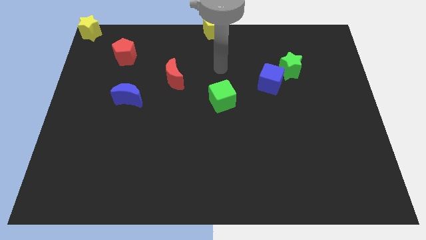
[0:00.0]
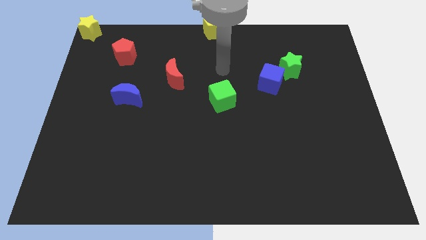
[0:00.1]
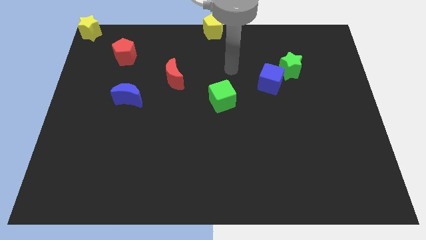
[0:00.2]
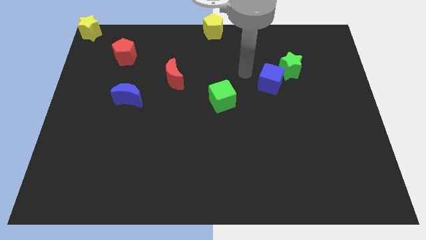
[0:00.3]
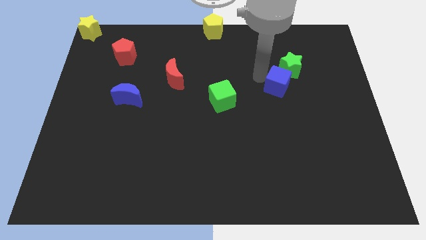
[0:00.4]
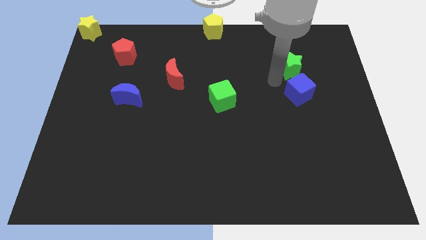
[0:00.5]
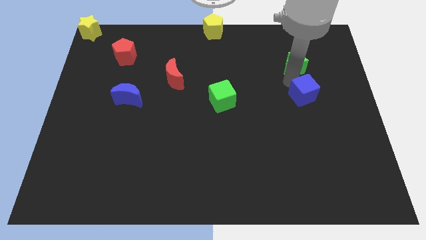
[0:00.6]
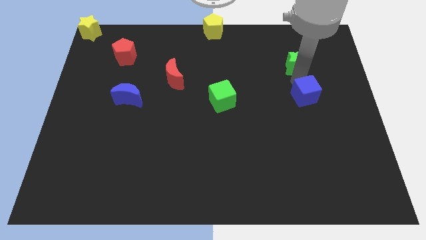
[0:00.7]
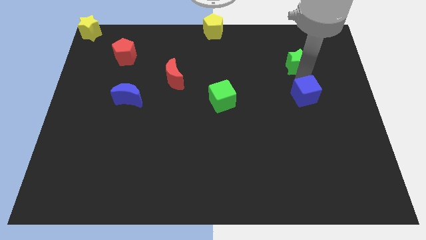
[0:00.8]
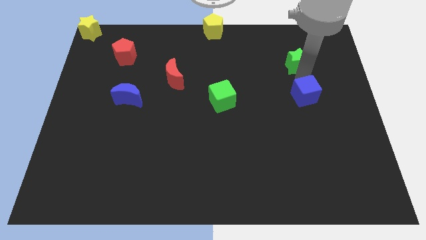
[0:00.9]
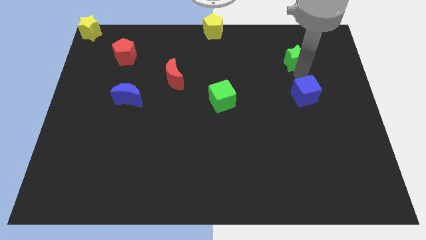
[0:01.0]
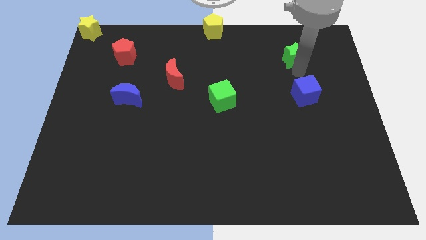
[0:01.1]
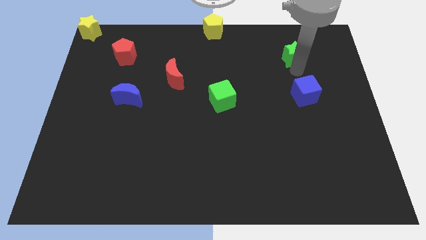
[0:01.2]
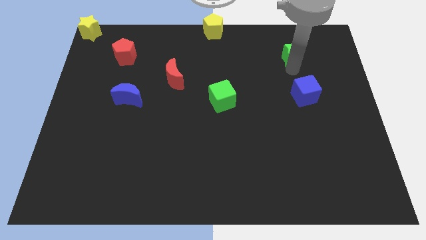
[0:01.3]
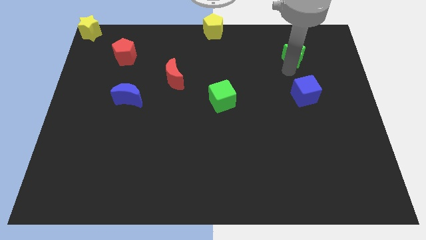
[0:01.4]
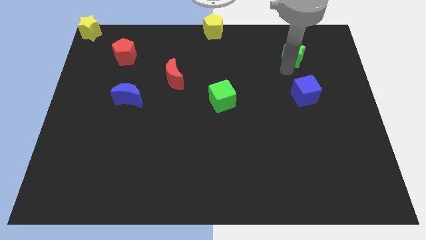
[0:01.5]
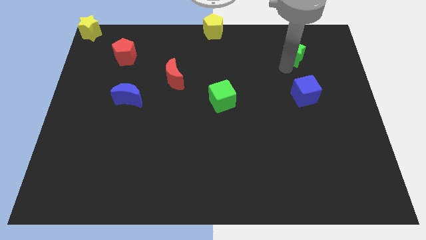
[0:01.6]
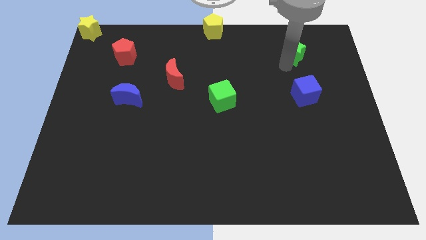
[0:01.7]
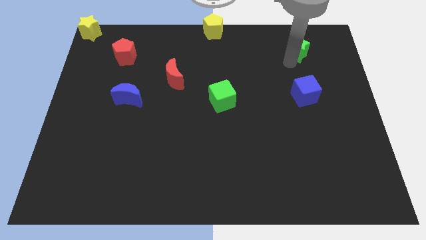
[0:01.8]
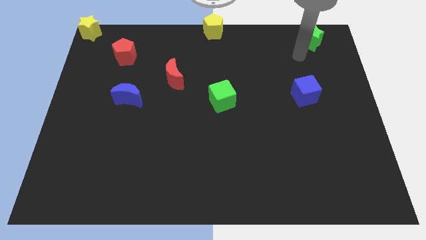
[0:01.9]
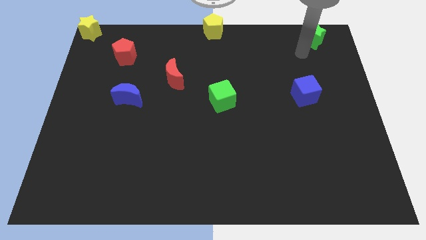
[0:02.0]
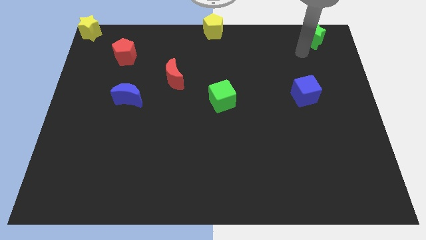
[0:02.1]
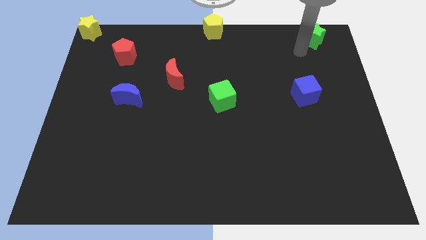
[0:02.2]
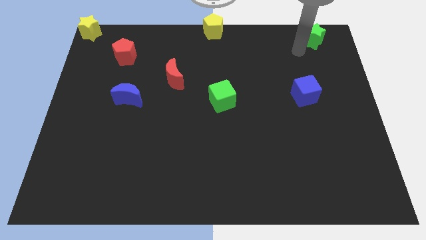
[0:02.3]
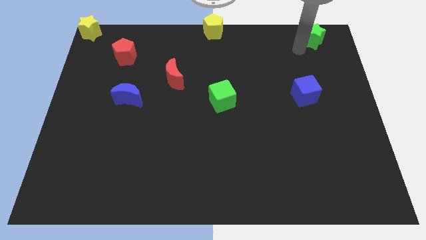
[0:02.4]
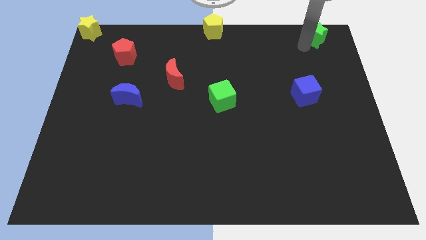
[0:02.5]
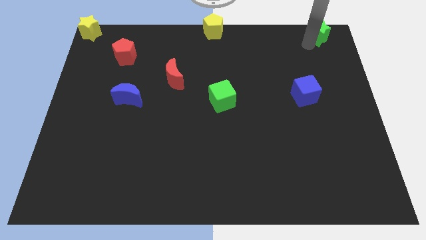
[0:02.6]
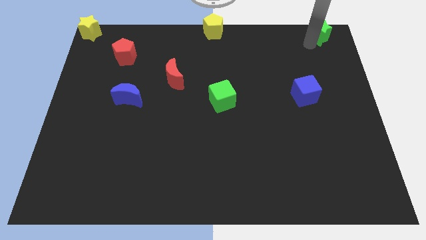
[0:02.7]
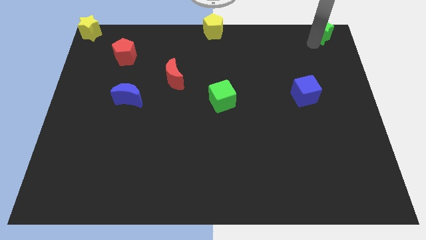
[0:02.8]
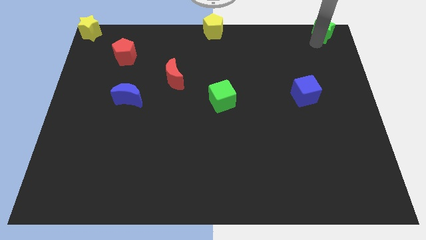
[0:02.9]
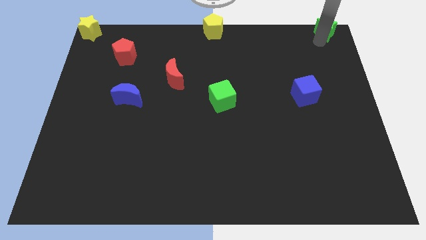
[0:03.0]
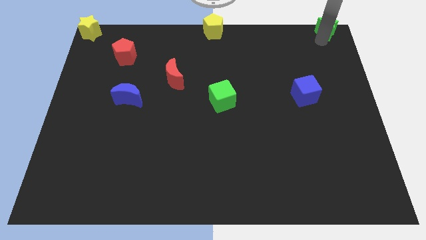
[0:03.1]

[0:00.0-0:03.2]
place green star towards top right corner

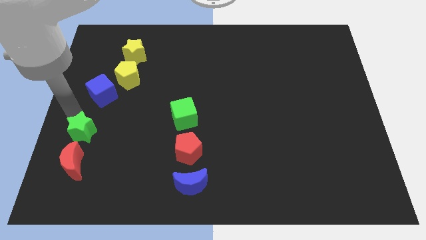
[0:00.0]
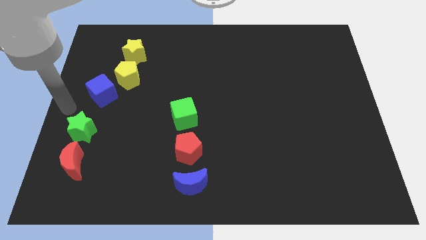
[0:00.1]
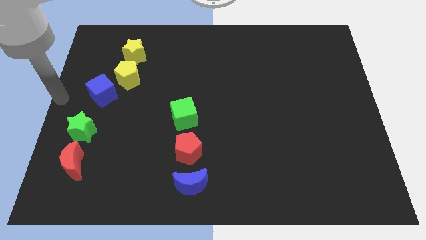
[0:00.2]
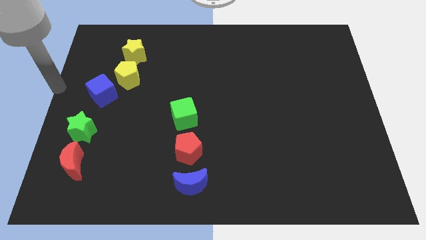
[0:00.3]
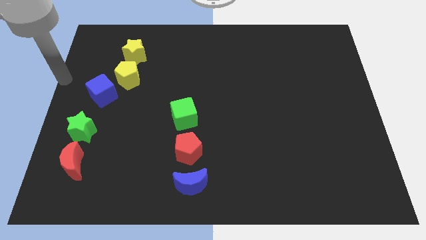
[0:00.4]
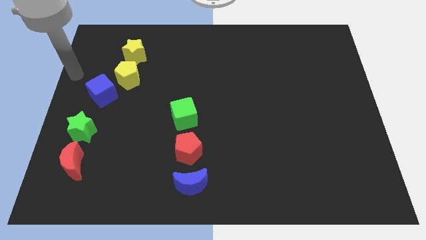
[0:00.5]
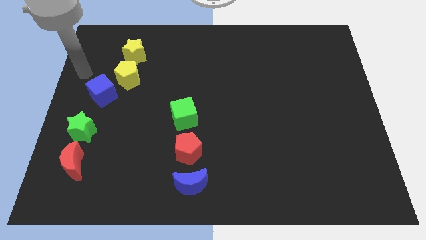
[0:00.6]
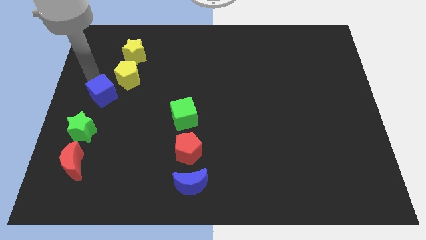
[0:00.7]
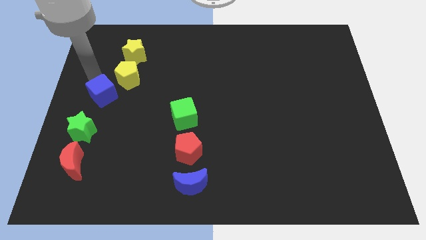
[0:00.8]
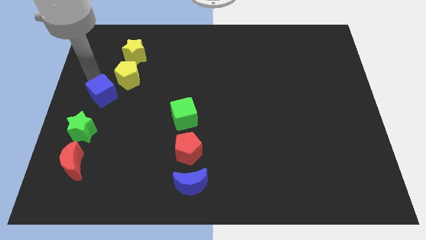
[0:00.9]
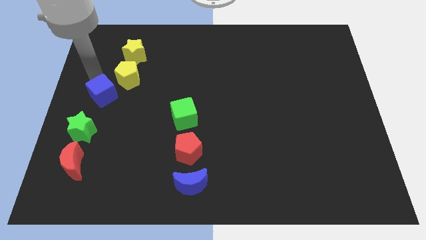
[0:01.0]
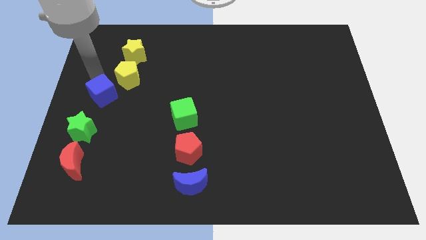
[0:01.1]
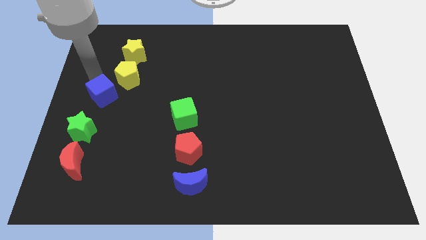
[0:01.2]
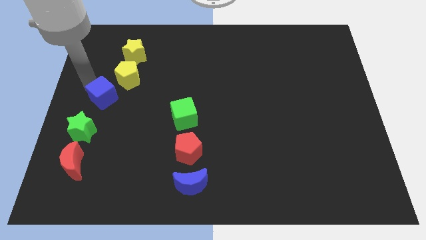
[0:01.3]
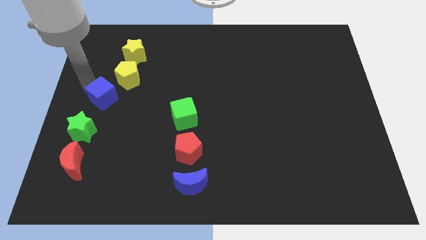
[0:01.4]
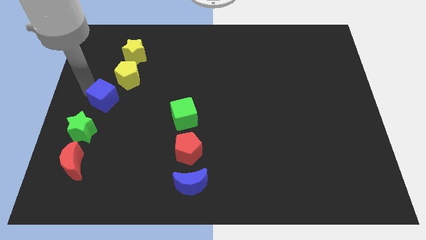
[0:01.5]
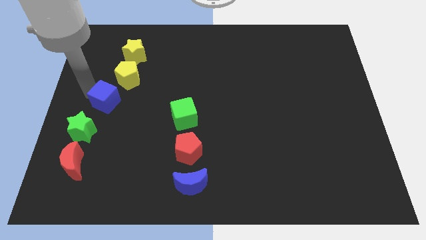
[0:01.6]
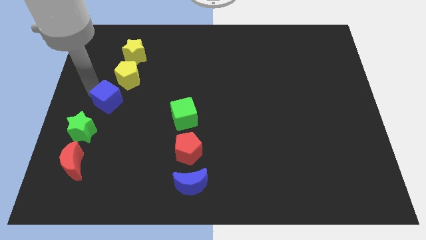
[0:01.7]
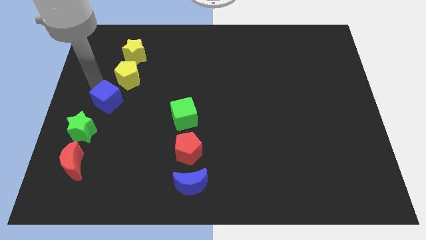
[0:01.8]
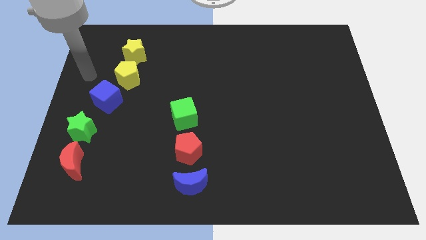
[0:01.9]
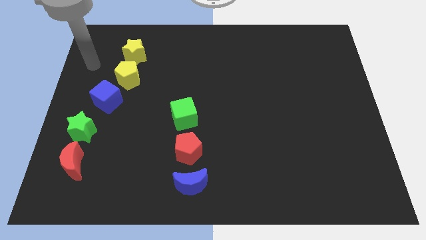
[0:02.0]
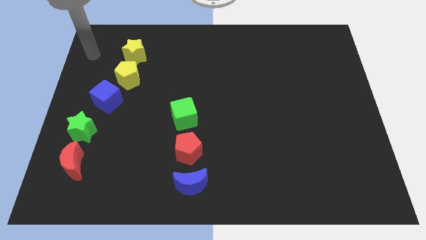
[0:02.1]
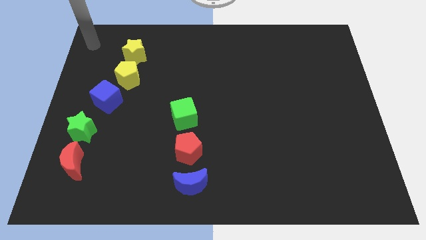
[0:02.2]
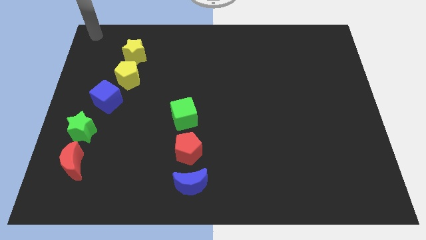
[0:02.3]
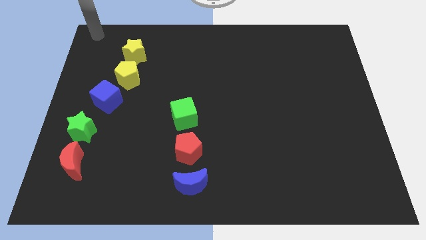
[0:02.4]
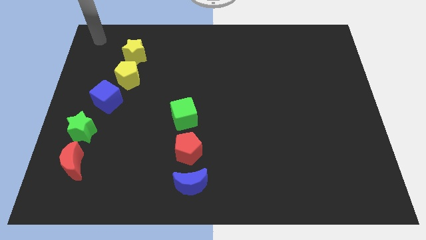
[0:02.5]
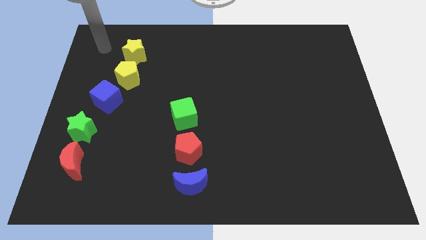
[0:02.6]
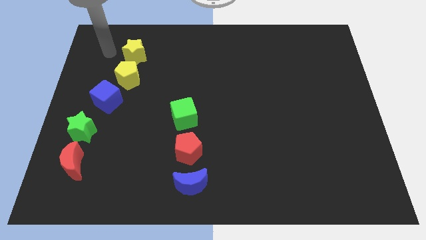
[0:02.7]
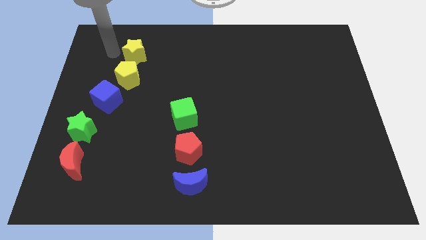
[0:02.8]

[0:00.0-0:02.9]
place the blue cube in between the yellow pentagon and green star

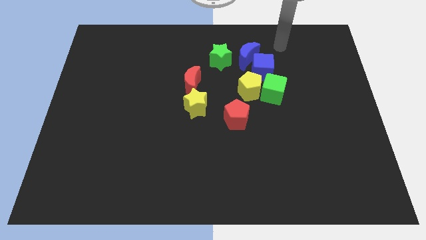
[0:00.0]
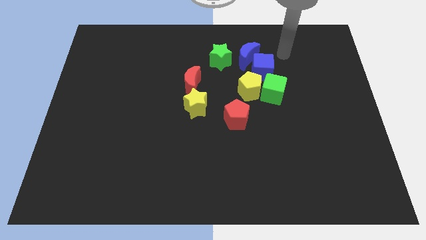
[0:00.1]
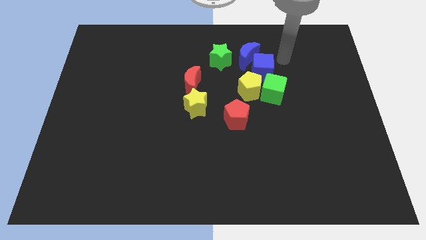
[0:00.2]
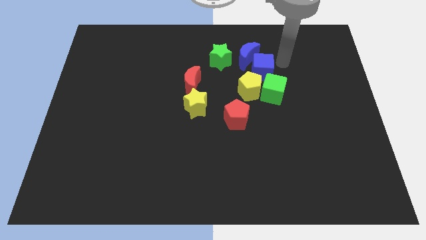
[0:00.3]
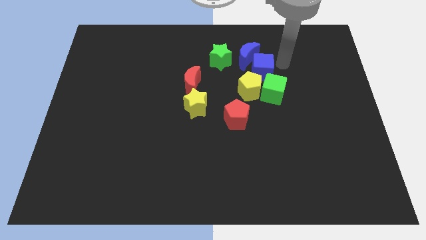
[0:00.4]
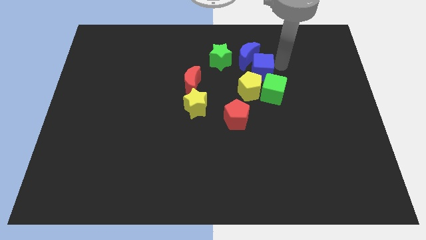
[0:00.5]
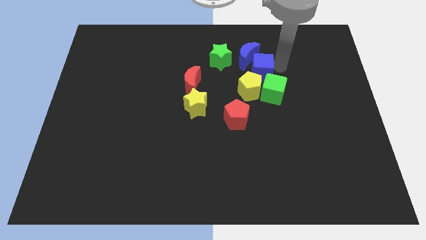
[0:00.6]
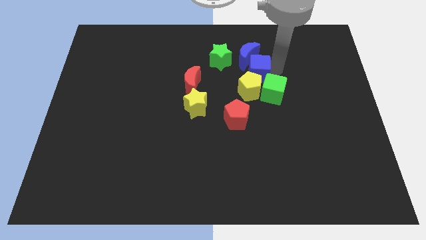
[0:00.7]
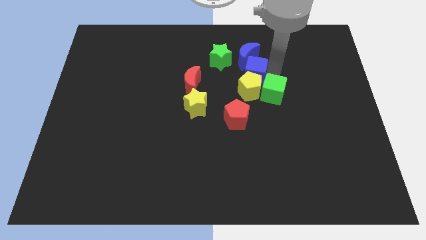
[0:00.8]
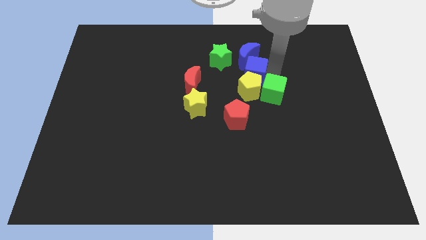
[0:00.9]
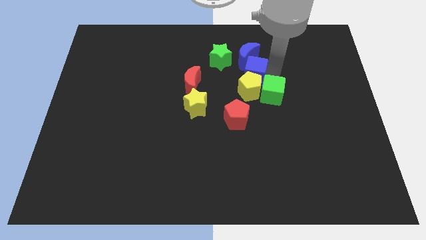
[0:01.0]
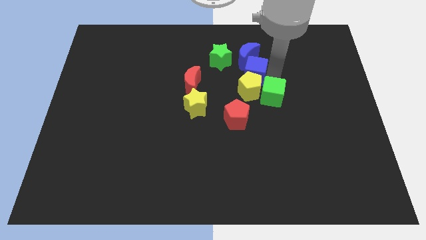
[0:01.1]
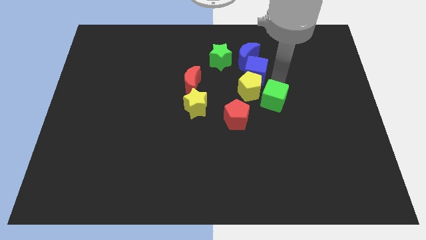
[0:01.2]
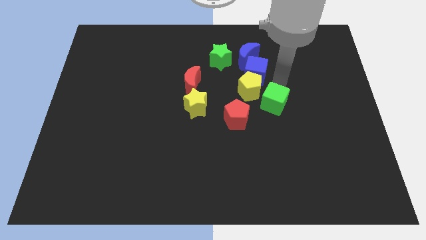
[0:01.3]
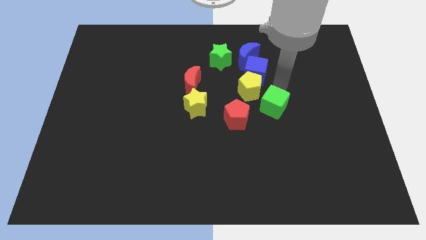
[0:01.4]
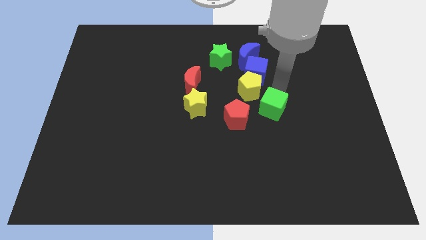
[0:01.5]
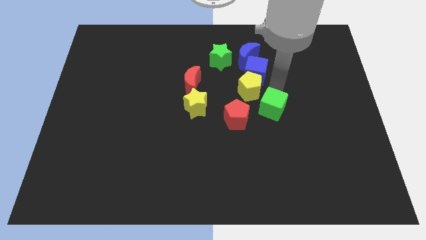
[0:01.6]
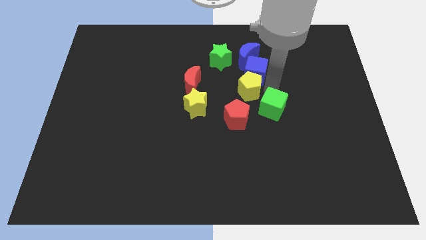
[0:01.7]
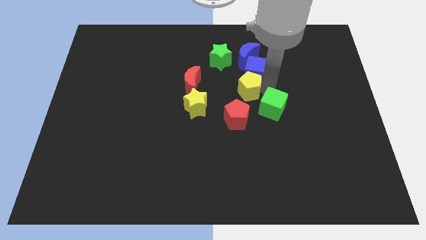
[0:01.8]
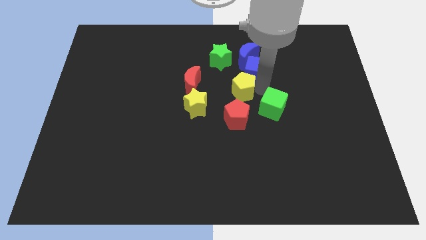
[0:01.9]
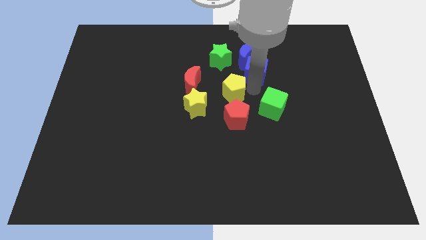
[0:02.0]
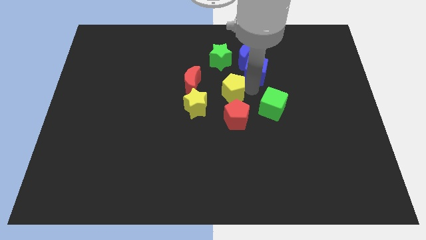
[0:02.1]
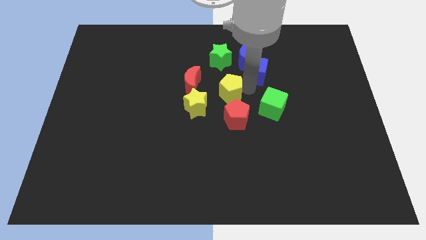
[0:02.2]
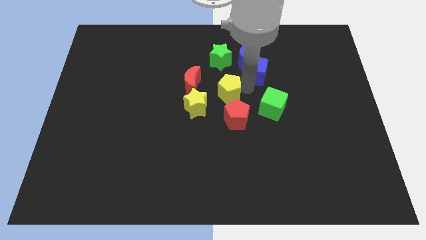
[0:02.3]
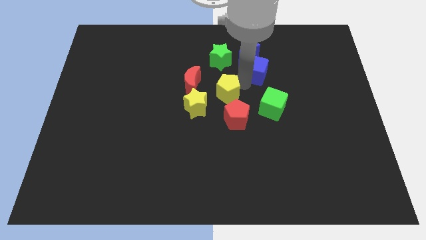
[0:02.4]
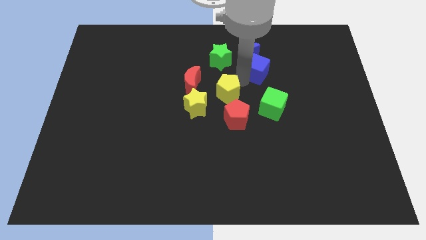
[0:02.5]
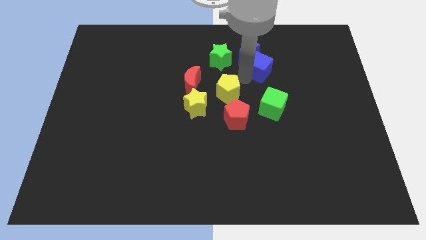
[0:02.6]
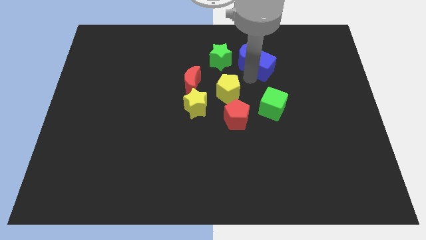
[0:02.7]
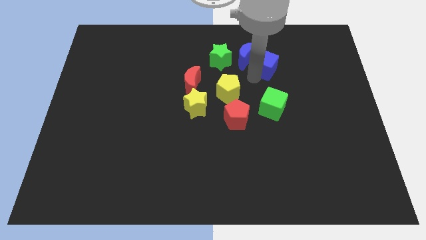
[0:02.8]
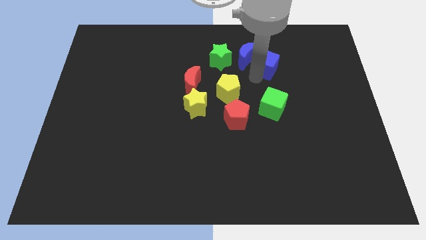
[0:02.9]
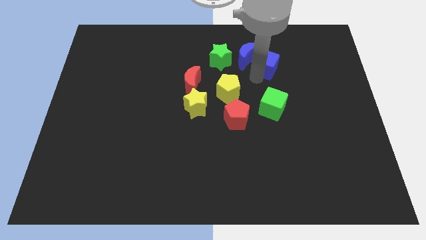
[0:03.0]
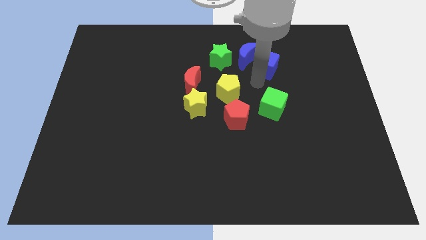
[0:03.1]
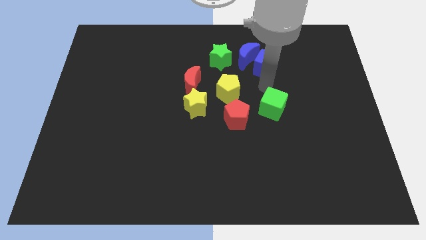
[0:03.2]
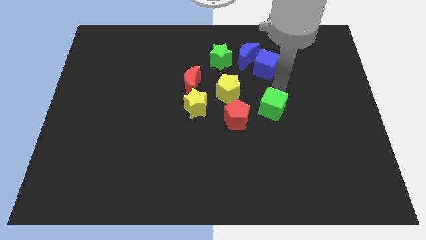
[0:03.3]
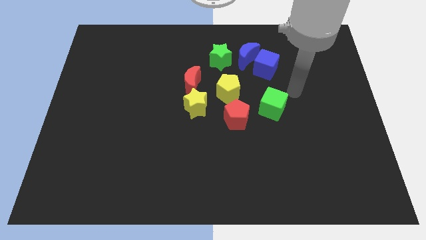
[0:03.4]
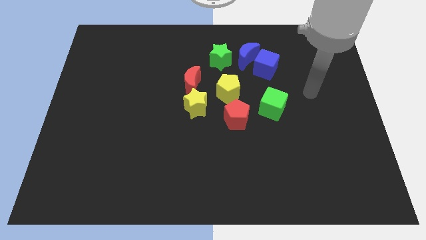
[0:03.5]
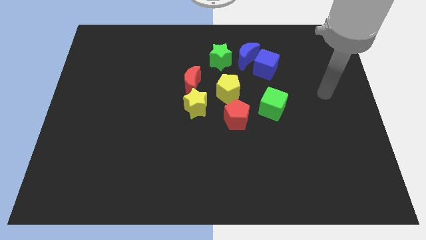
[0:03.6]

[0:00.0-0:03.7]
form a triangle with the blue cube yellow pentagon and green cube
